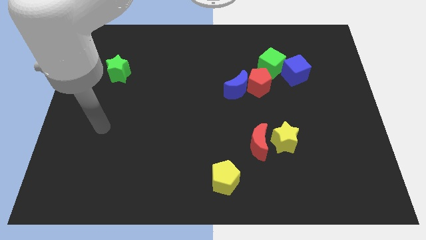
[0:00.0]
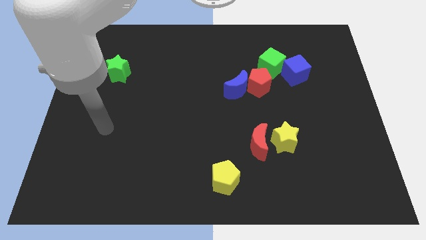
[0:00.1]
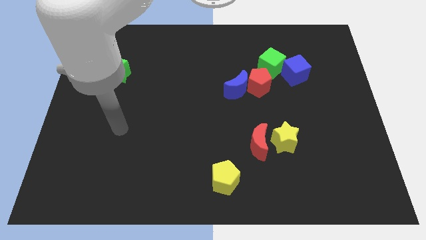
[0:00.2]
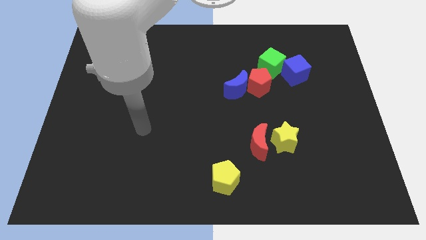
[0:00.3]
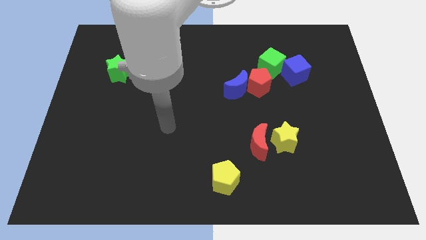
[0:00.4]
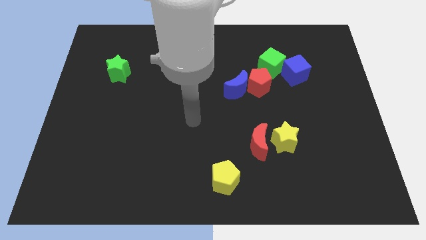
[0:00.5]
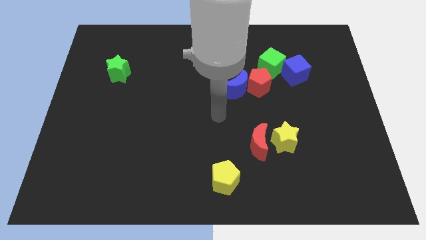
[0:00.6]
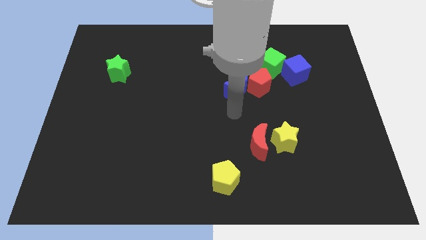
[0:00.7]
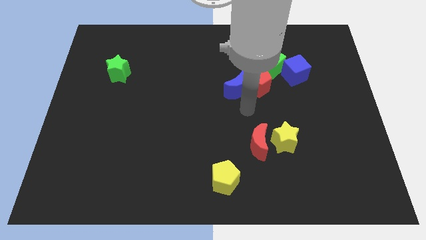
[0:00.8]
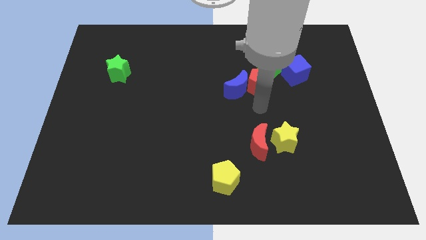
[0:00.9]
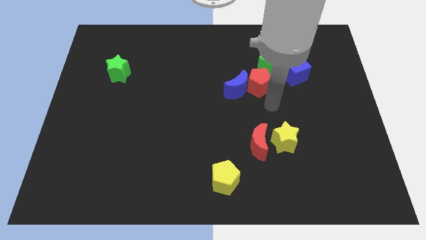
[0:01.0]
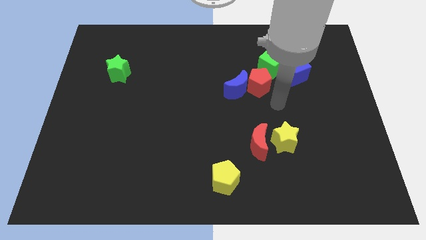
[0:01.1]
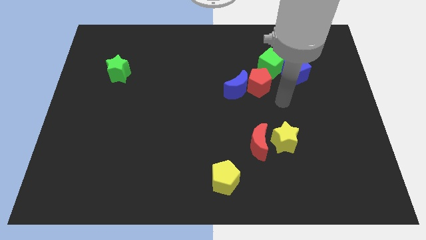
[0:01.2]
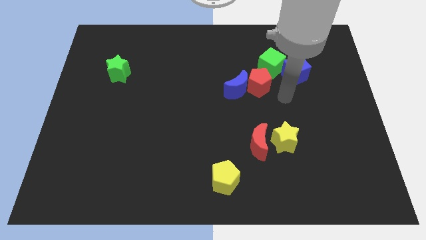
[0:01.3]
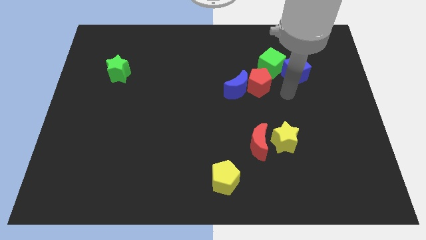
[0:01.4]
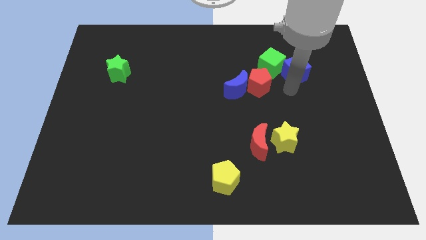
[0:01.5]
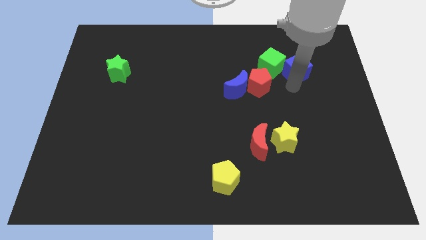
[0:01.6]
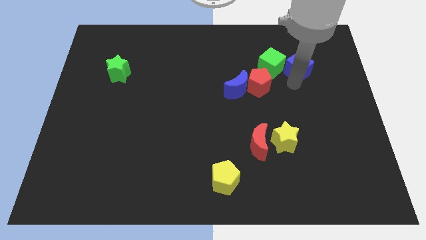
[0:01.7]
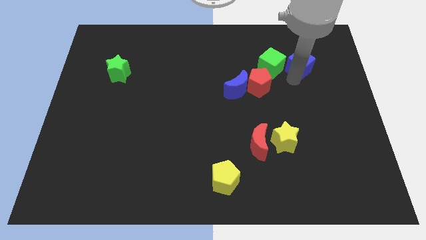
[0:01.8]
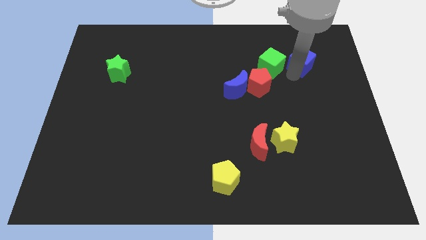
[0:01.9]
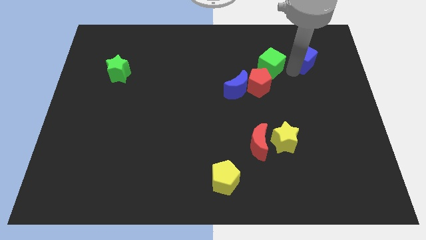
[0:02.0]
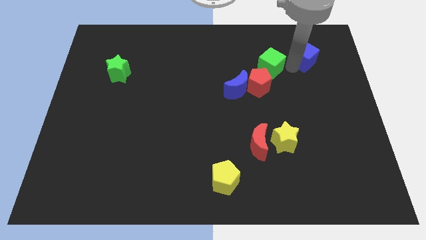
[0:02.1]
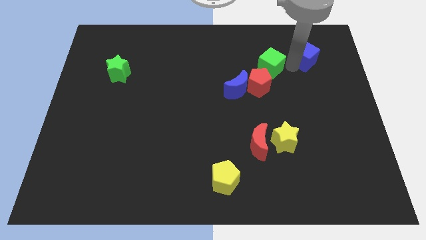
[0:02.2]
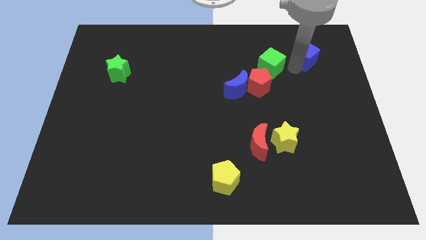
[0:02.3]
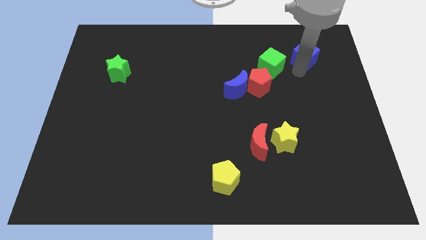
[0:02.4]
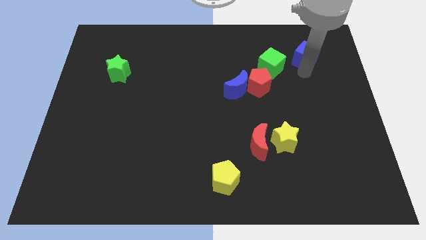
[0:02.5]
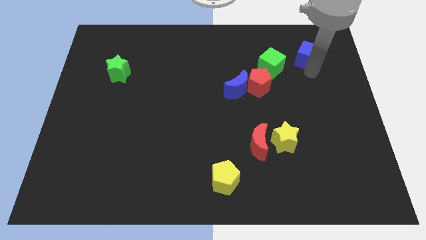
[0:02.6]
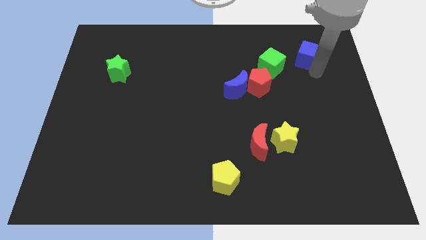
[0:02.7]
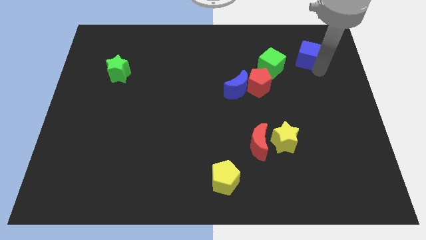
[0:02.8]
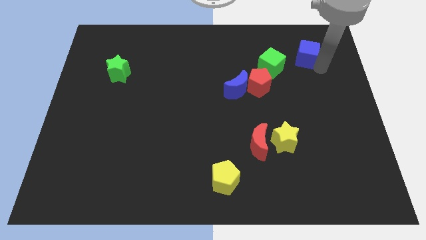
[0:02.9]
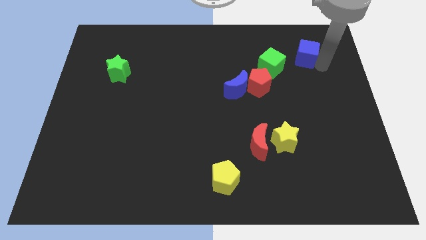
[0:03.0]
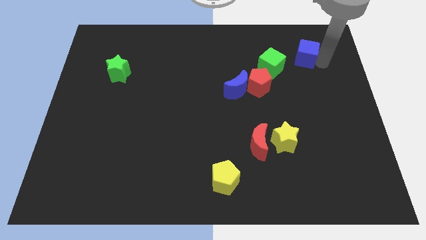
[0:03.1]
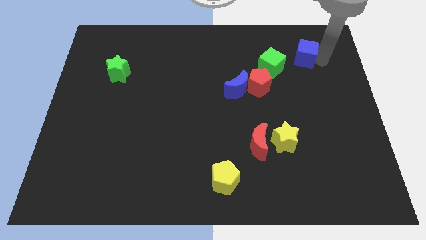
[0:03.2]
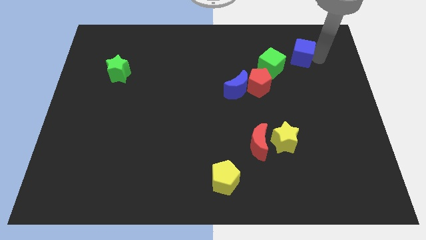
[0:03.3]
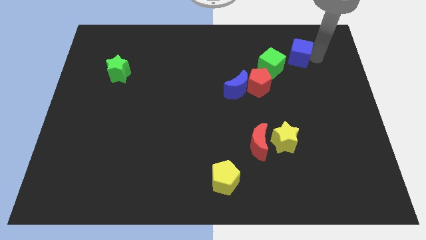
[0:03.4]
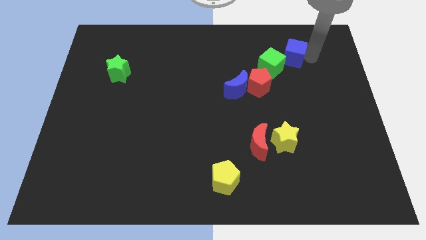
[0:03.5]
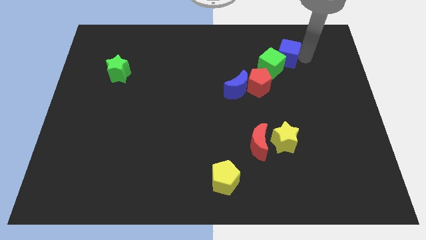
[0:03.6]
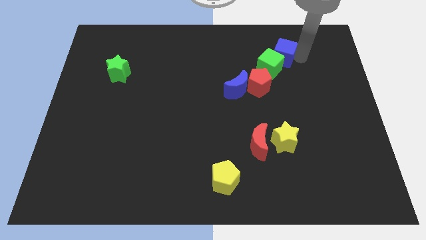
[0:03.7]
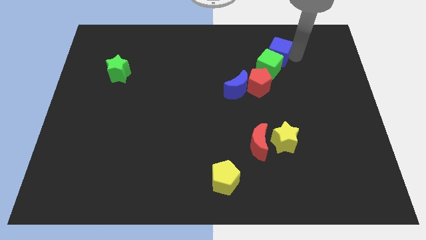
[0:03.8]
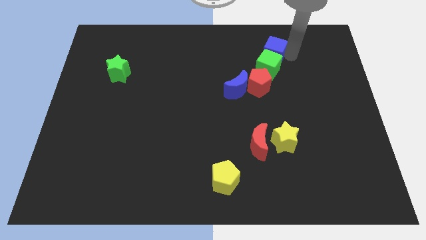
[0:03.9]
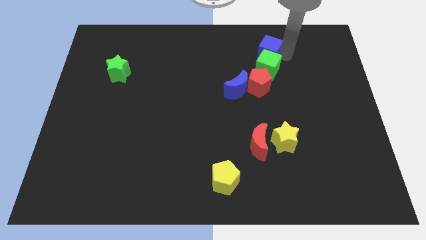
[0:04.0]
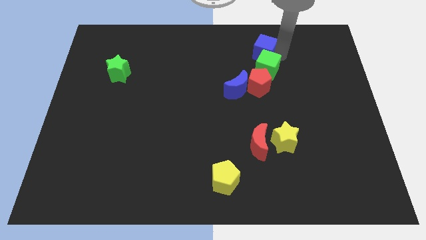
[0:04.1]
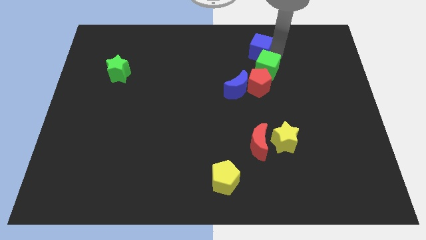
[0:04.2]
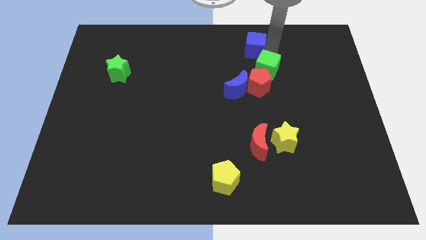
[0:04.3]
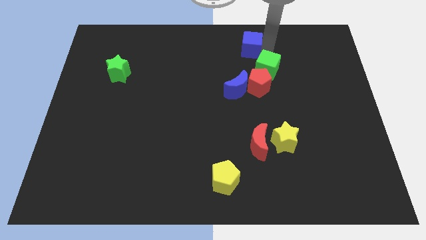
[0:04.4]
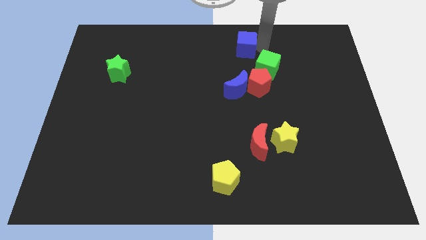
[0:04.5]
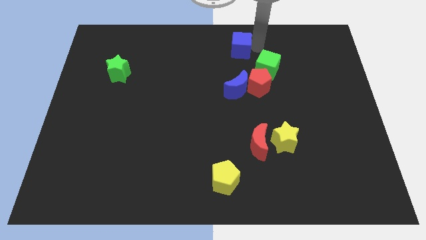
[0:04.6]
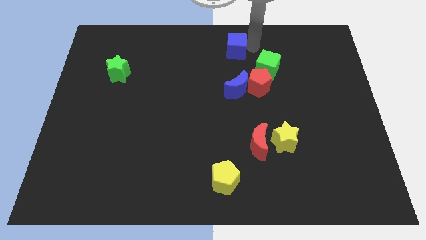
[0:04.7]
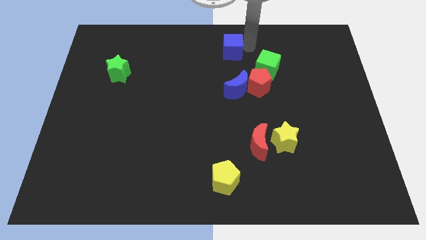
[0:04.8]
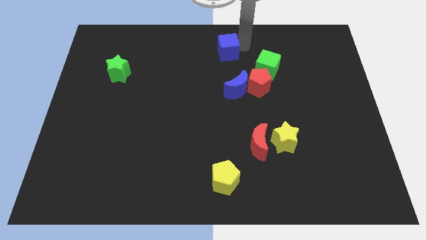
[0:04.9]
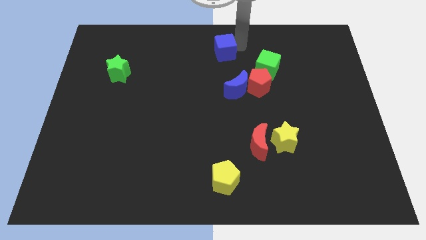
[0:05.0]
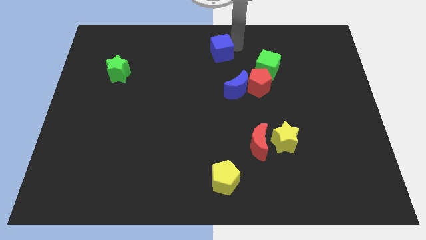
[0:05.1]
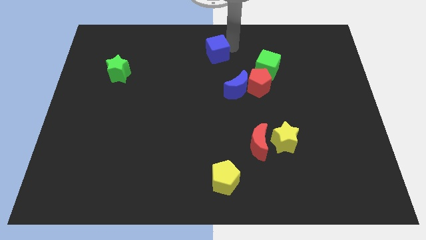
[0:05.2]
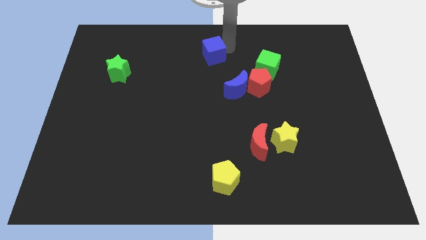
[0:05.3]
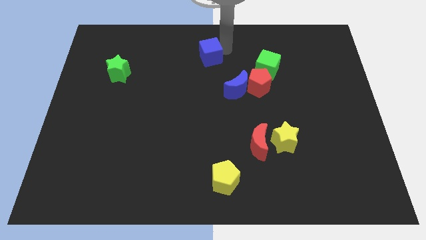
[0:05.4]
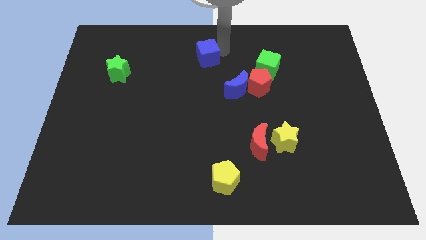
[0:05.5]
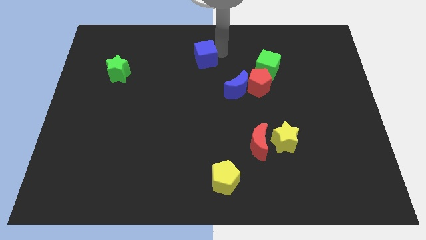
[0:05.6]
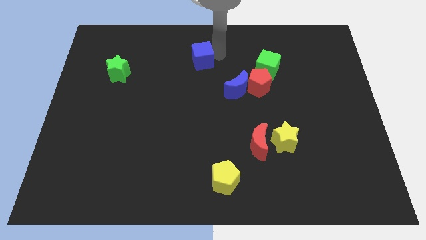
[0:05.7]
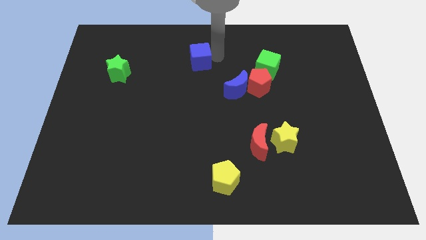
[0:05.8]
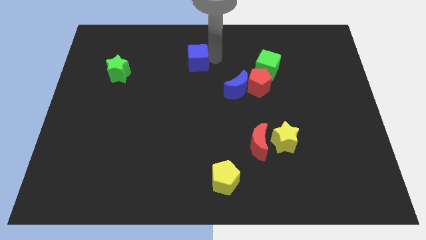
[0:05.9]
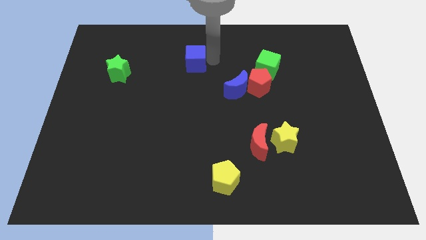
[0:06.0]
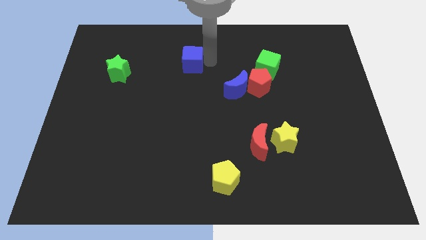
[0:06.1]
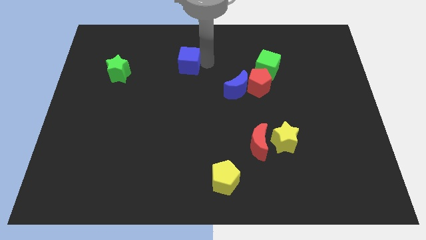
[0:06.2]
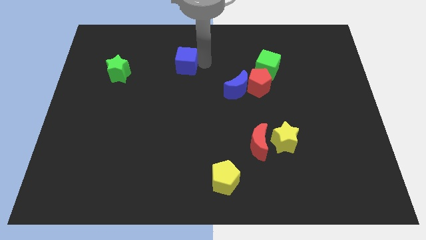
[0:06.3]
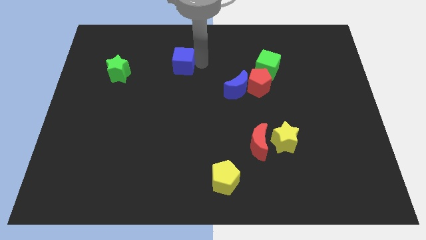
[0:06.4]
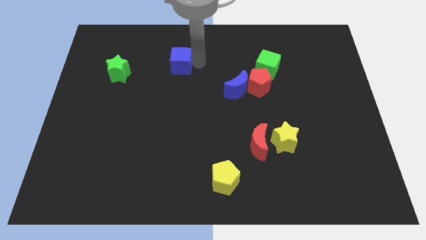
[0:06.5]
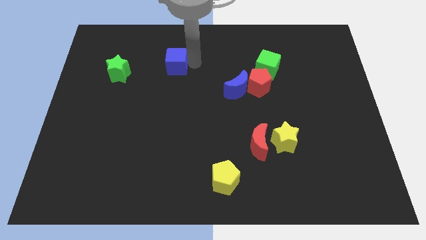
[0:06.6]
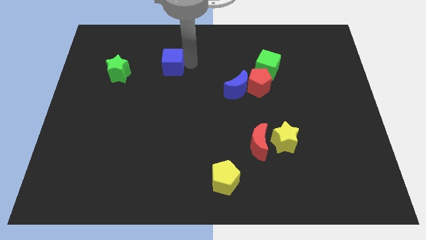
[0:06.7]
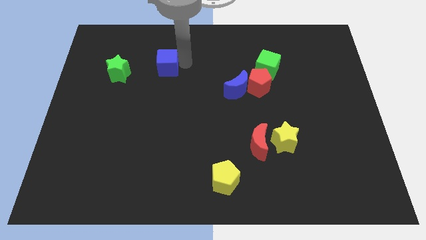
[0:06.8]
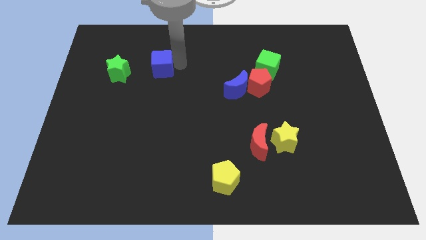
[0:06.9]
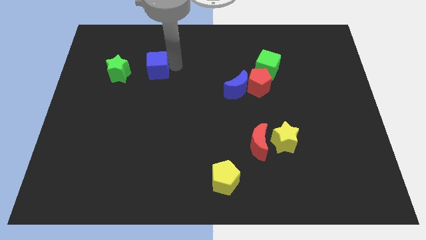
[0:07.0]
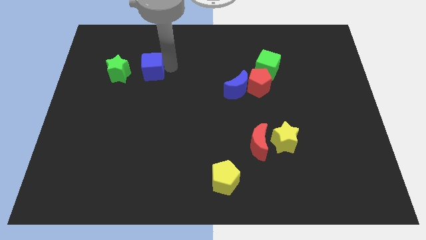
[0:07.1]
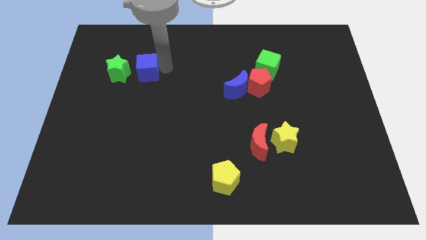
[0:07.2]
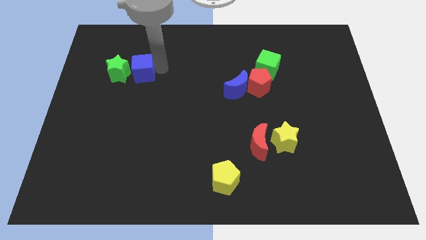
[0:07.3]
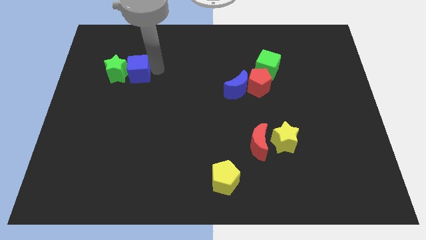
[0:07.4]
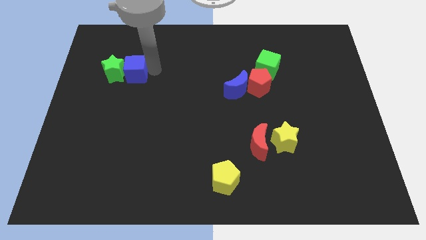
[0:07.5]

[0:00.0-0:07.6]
put the blue cube next to the green star

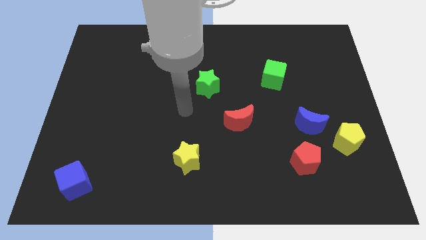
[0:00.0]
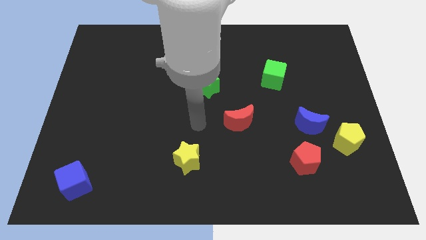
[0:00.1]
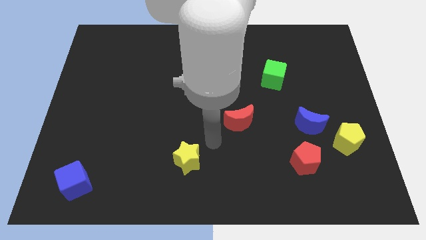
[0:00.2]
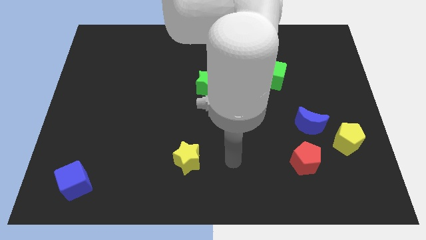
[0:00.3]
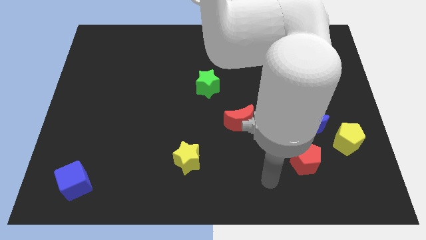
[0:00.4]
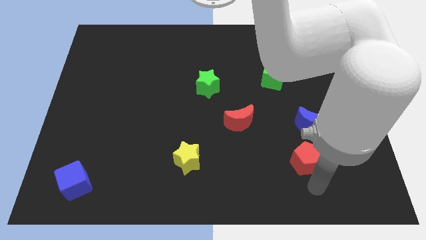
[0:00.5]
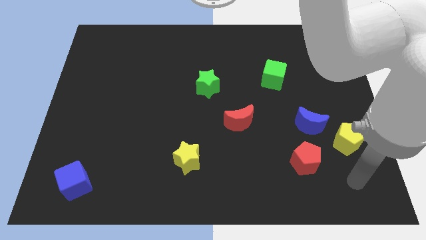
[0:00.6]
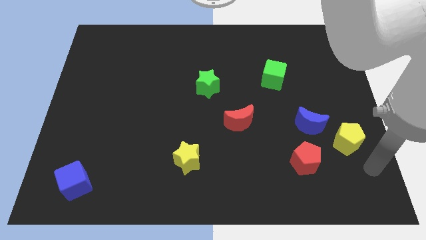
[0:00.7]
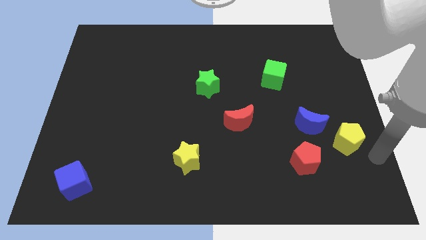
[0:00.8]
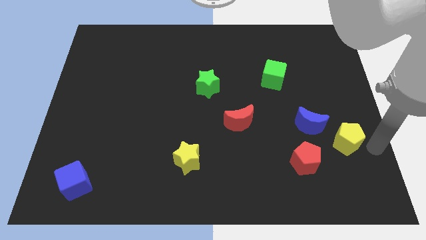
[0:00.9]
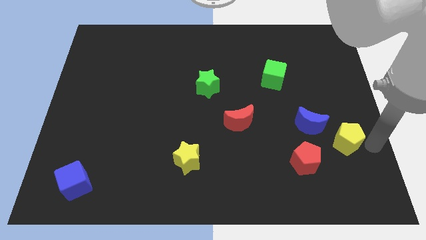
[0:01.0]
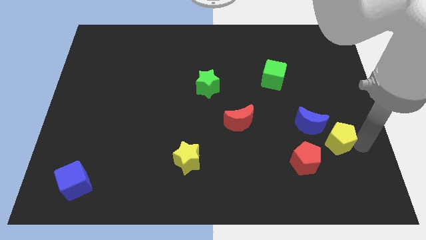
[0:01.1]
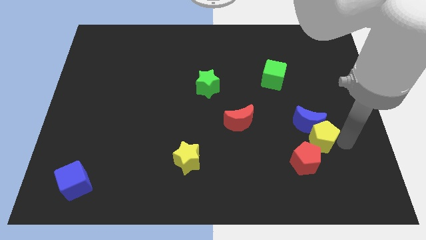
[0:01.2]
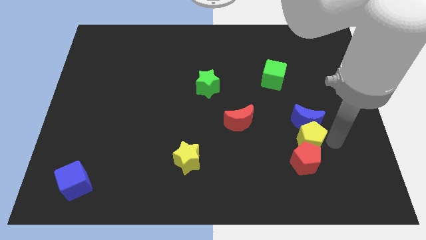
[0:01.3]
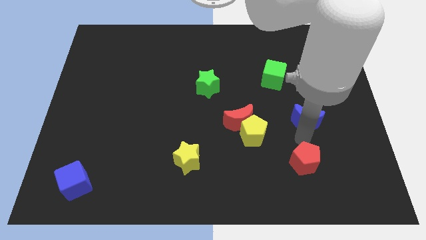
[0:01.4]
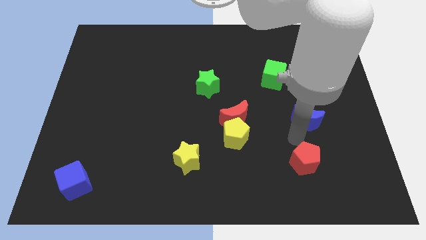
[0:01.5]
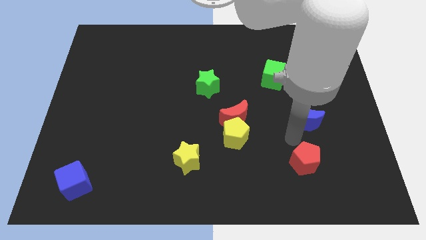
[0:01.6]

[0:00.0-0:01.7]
put the yellow pentagon close to the red moon
